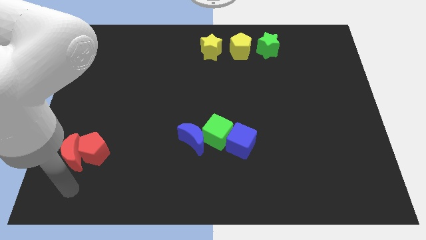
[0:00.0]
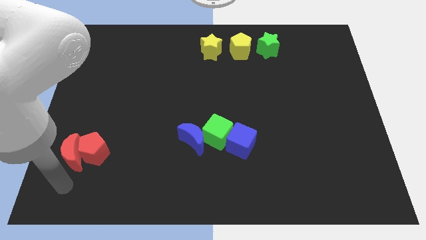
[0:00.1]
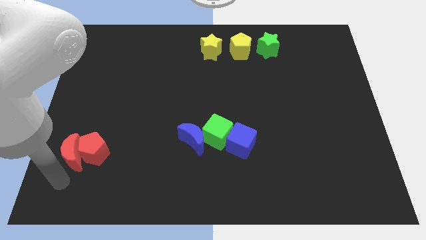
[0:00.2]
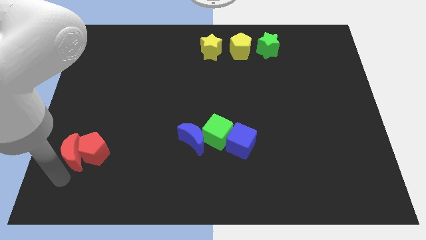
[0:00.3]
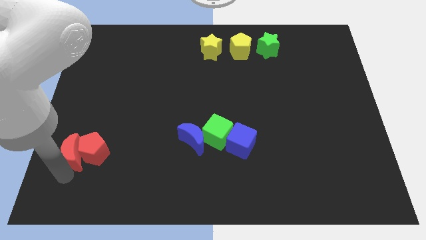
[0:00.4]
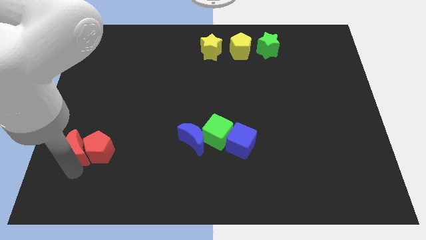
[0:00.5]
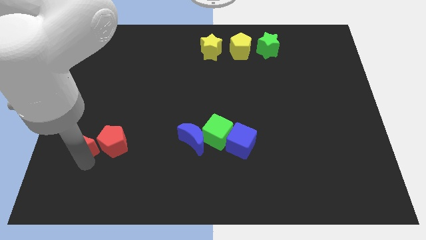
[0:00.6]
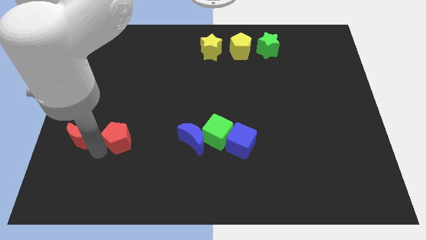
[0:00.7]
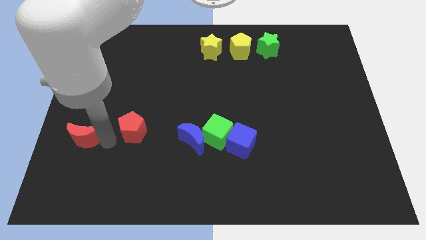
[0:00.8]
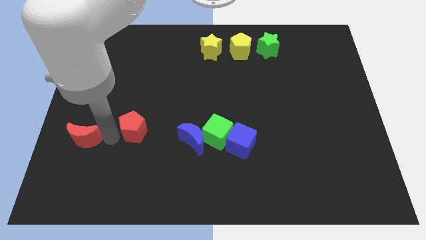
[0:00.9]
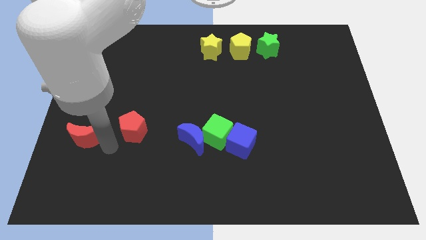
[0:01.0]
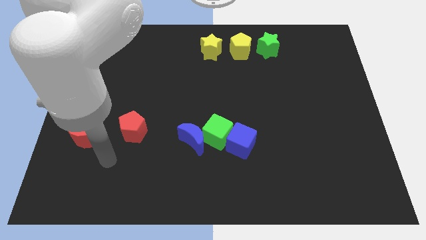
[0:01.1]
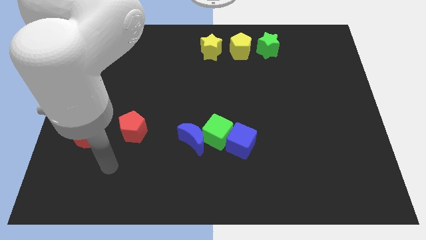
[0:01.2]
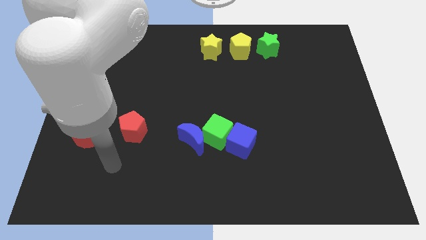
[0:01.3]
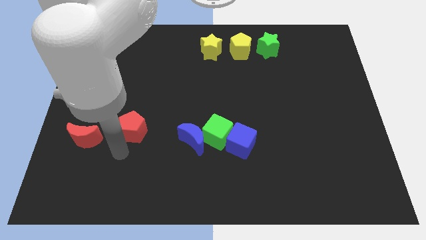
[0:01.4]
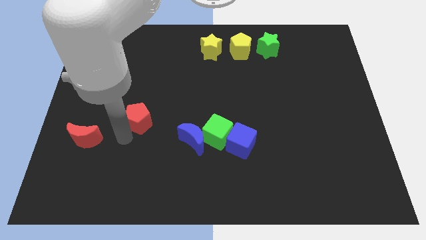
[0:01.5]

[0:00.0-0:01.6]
separate the both red pentagon and red crescent

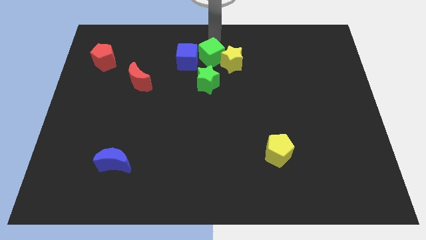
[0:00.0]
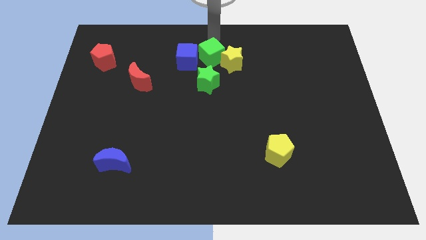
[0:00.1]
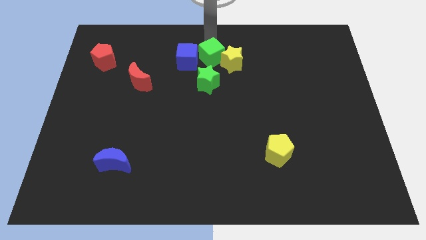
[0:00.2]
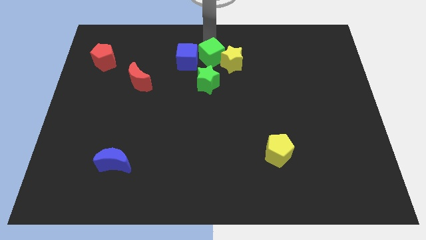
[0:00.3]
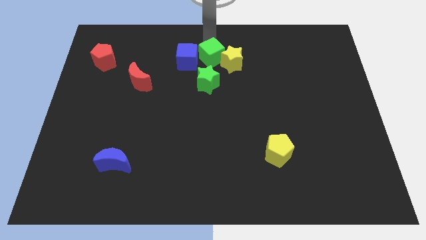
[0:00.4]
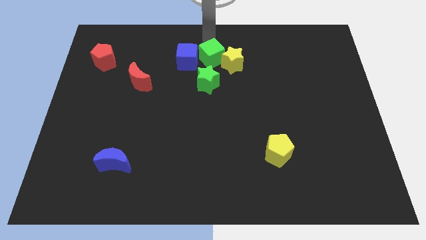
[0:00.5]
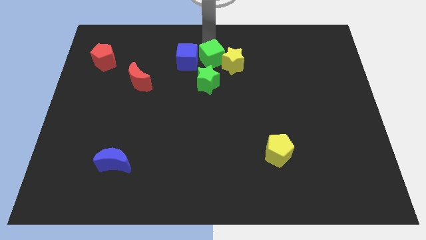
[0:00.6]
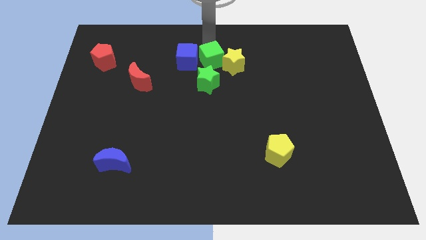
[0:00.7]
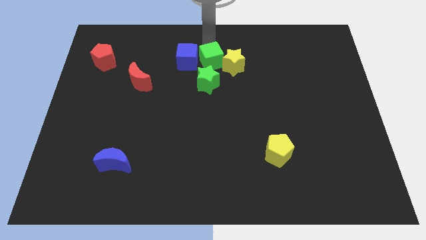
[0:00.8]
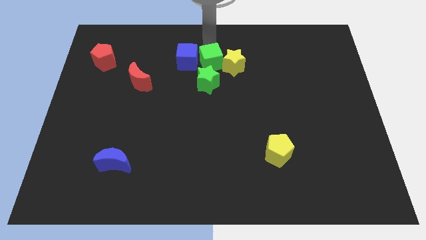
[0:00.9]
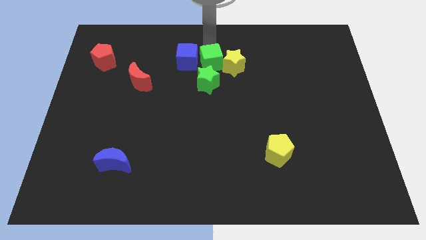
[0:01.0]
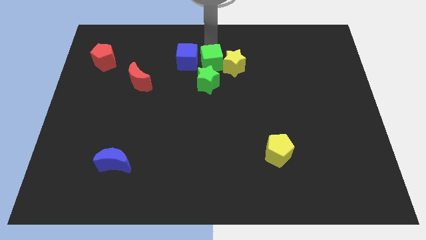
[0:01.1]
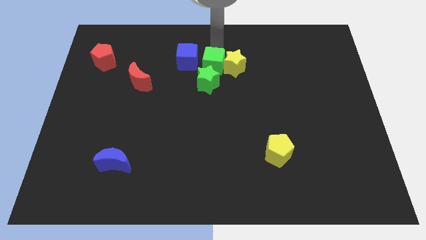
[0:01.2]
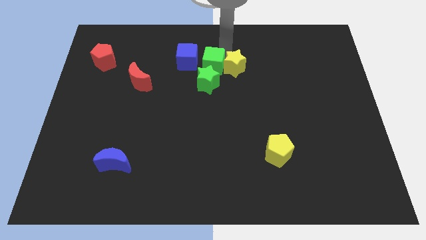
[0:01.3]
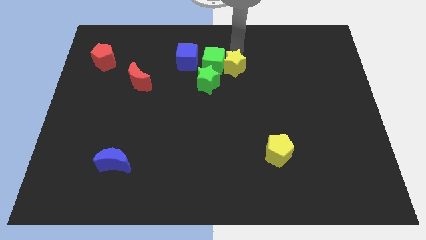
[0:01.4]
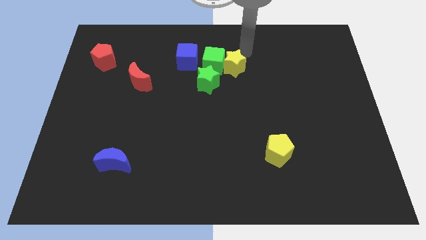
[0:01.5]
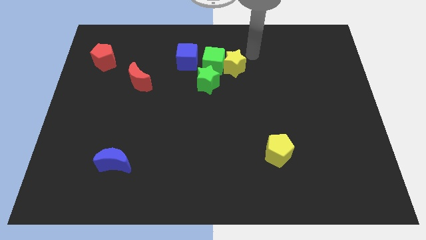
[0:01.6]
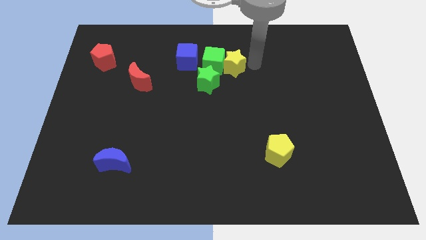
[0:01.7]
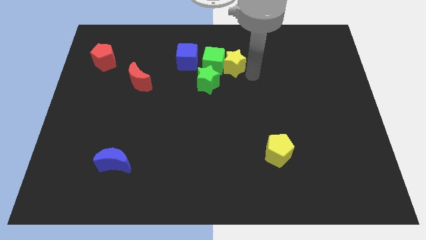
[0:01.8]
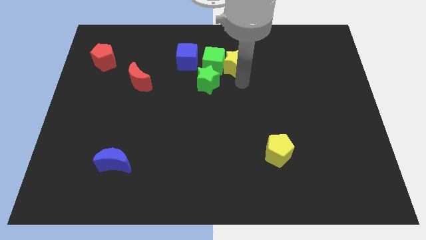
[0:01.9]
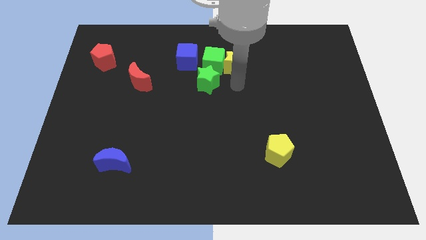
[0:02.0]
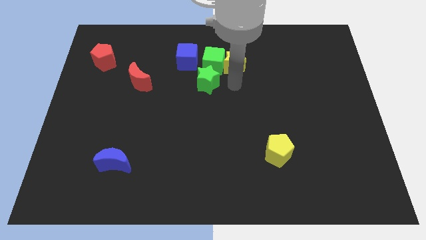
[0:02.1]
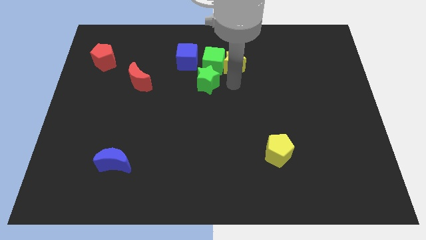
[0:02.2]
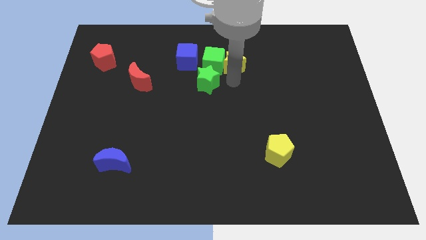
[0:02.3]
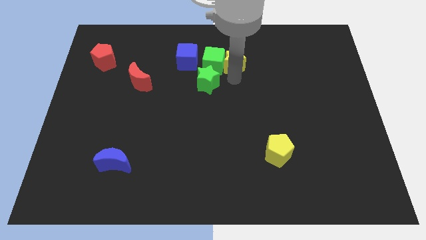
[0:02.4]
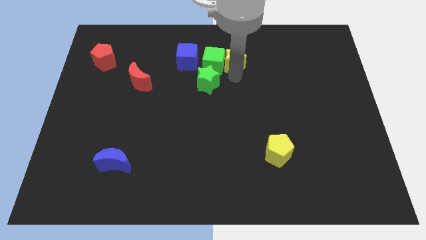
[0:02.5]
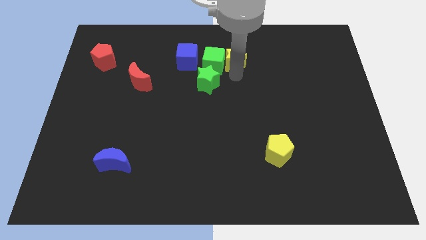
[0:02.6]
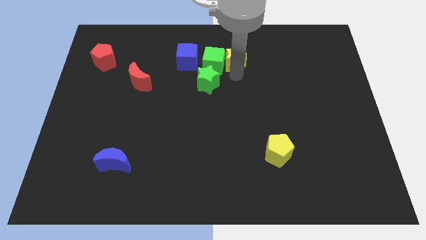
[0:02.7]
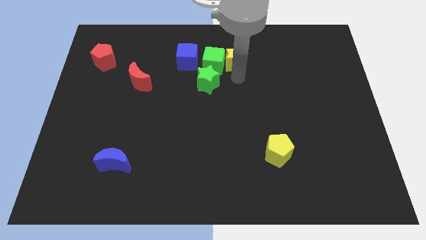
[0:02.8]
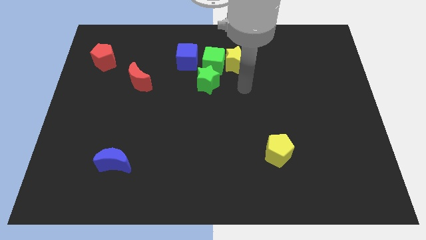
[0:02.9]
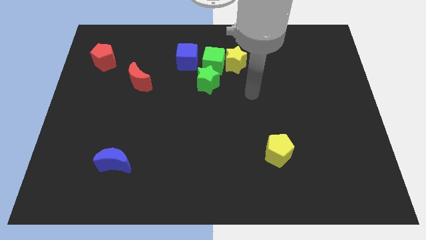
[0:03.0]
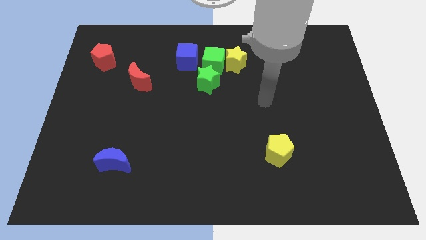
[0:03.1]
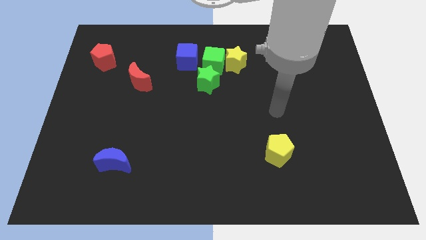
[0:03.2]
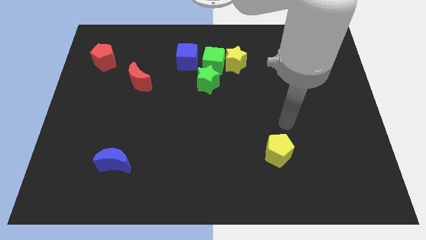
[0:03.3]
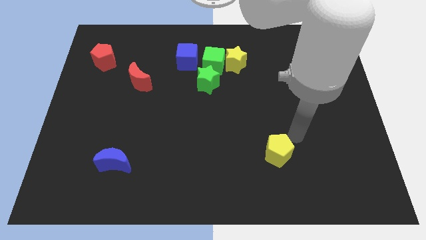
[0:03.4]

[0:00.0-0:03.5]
slightly push the green cube towards the green star

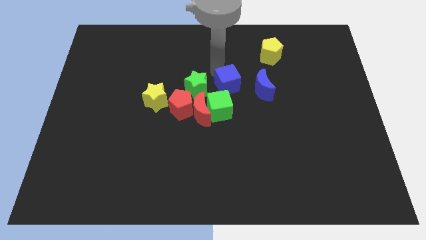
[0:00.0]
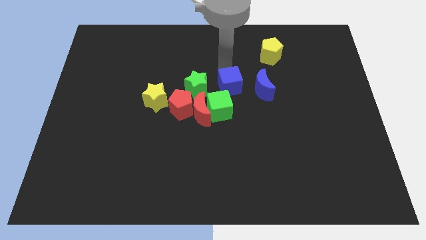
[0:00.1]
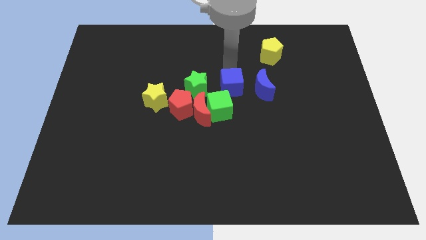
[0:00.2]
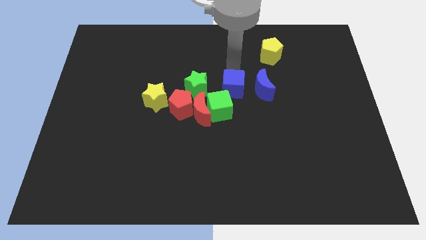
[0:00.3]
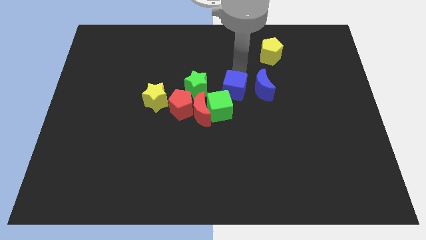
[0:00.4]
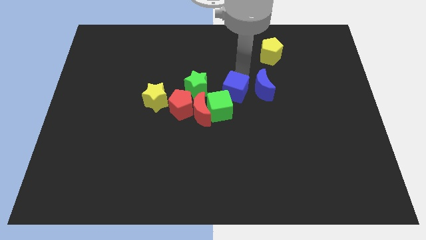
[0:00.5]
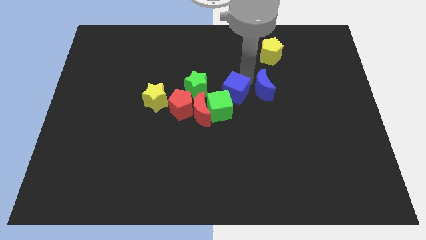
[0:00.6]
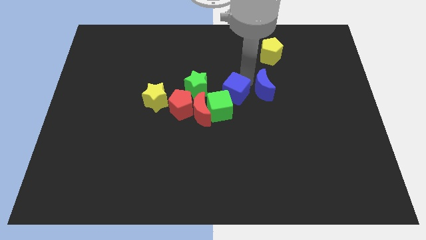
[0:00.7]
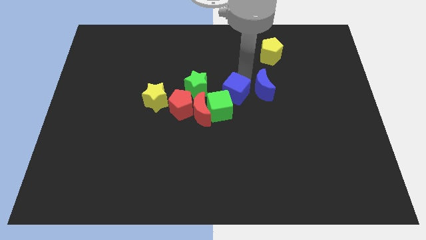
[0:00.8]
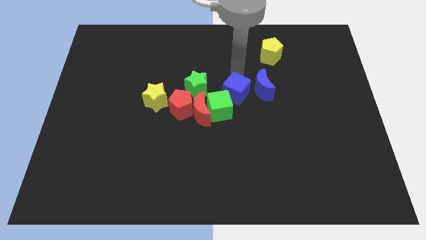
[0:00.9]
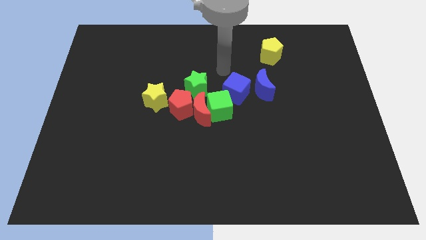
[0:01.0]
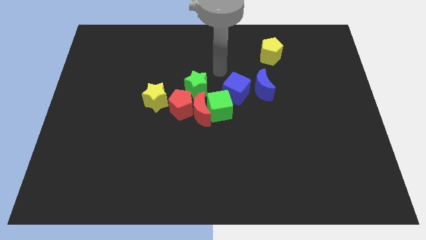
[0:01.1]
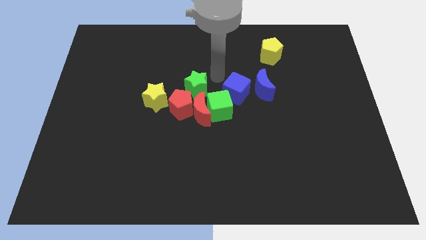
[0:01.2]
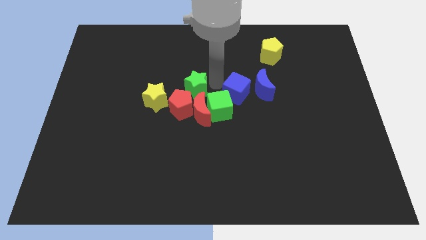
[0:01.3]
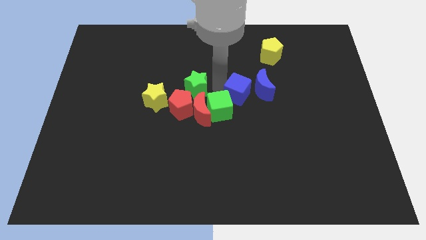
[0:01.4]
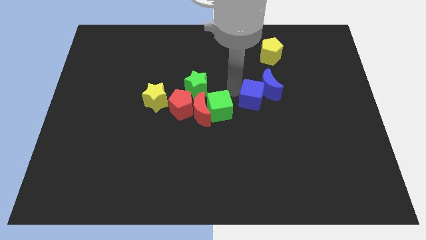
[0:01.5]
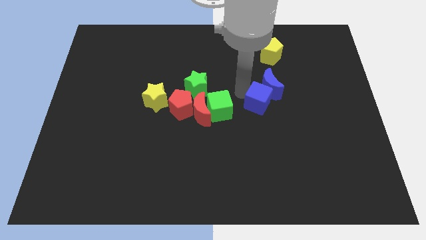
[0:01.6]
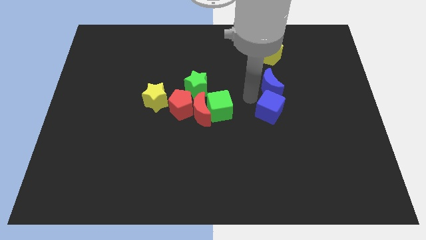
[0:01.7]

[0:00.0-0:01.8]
push the blue cube in to the blue moon

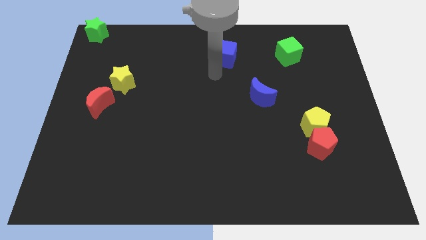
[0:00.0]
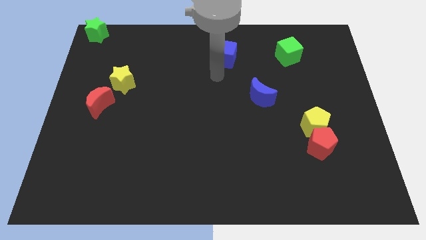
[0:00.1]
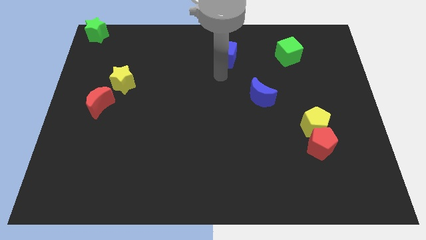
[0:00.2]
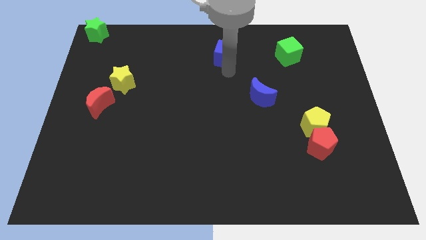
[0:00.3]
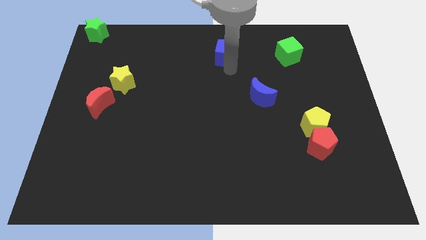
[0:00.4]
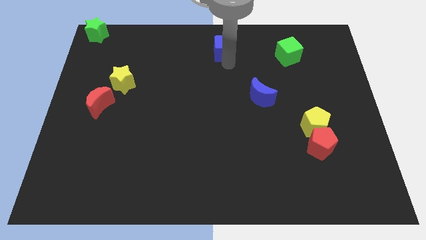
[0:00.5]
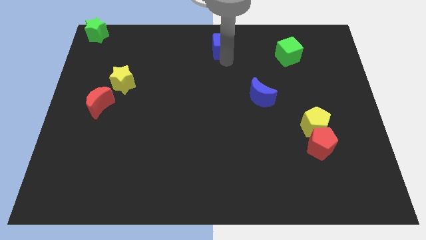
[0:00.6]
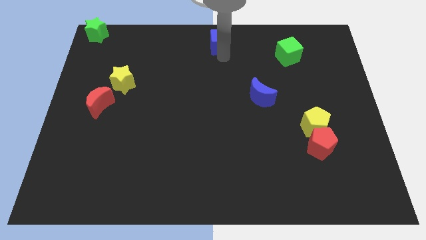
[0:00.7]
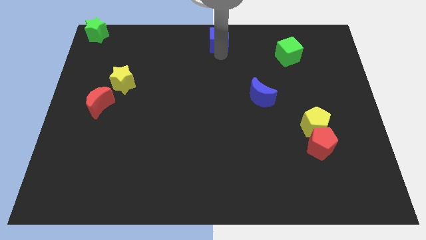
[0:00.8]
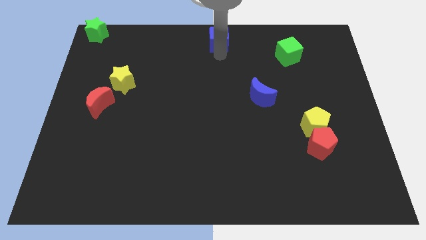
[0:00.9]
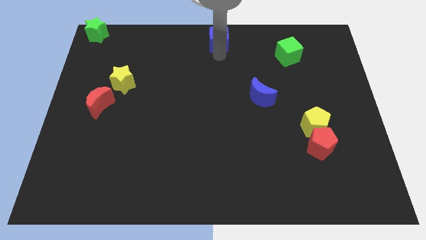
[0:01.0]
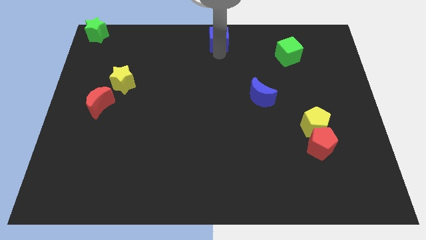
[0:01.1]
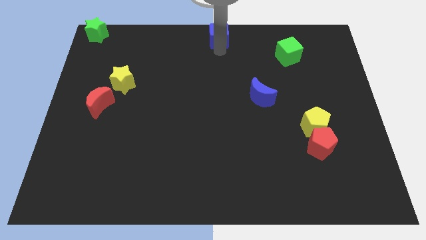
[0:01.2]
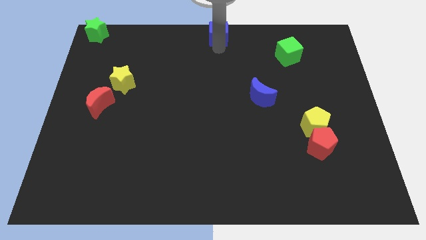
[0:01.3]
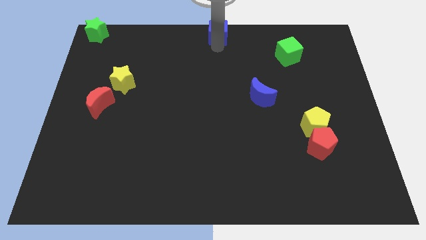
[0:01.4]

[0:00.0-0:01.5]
put the blue cube at the top center of the board

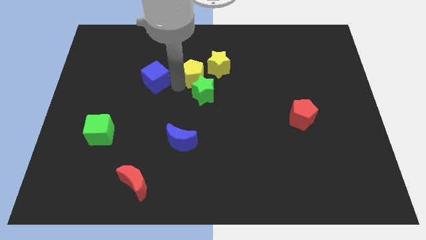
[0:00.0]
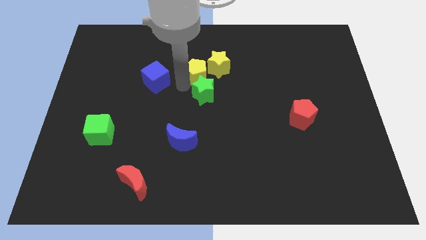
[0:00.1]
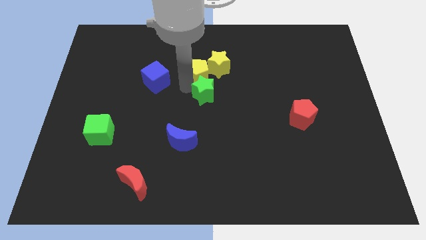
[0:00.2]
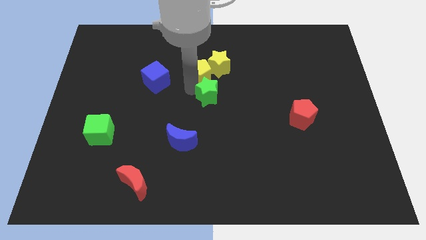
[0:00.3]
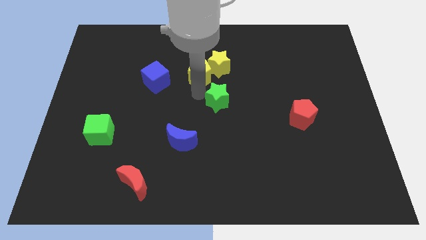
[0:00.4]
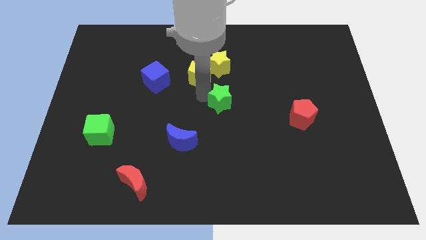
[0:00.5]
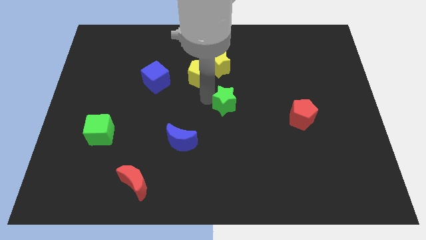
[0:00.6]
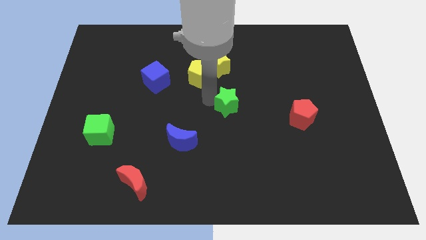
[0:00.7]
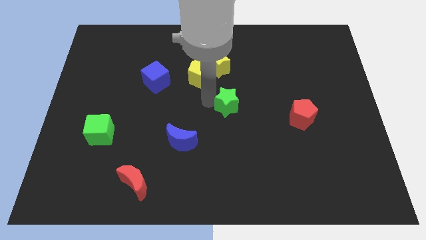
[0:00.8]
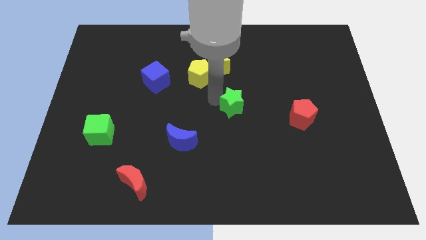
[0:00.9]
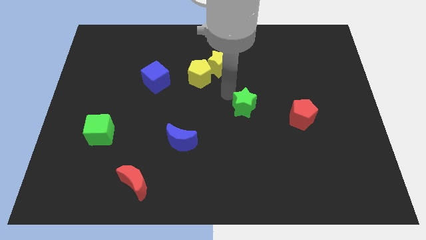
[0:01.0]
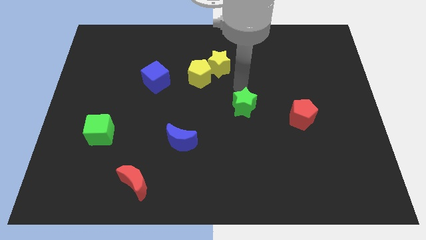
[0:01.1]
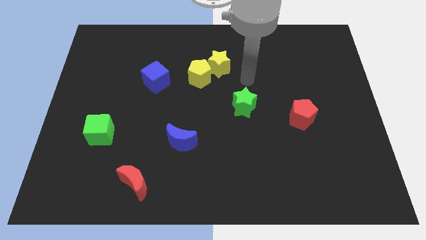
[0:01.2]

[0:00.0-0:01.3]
drag the green star to the center of the board
